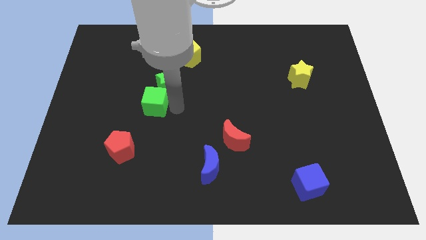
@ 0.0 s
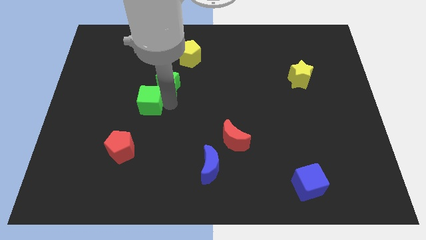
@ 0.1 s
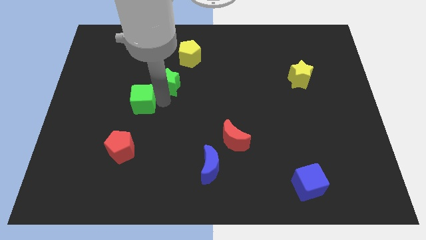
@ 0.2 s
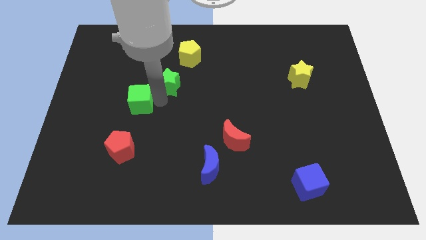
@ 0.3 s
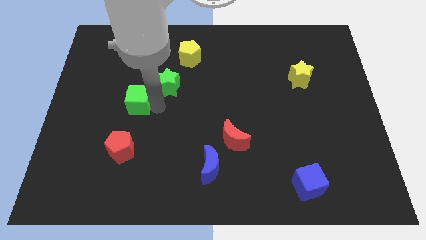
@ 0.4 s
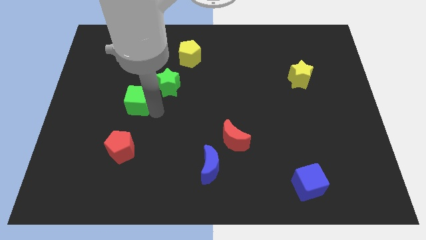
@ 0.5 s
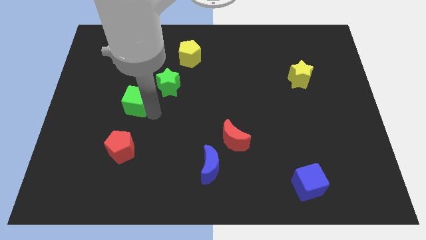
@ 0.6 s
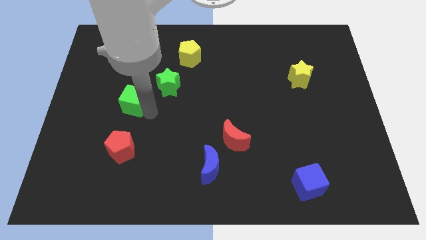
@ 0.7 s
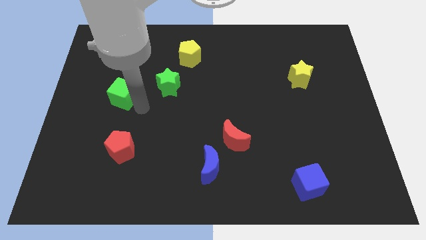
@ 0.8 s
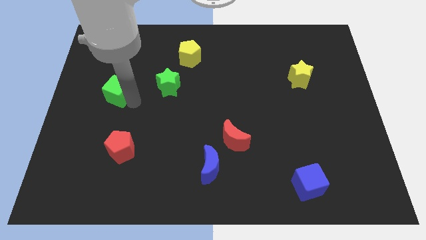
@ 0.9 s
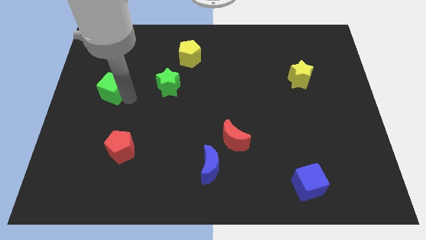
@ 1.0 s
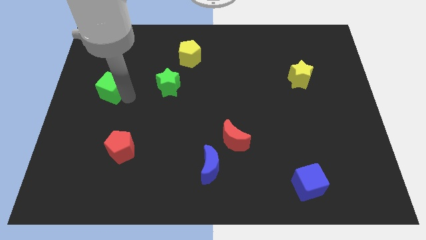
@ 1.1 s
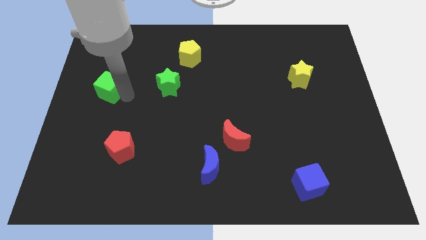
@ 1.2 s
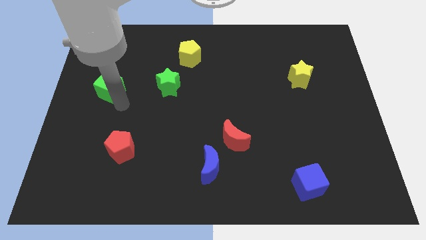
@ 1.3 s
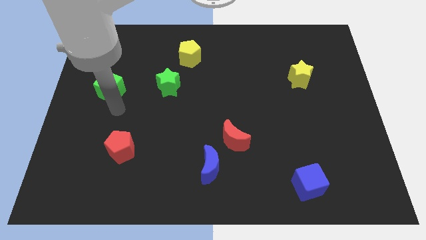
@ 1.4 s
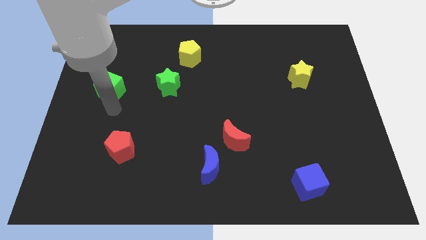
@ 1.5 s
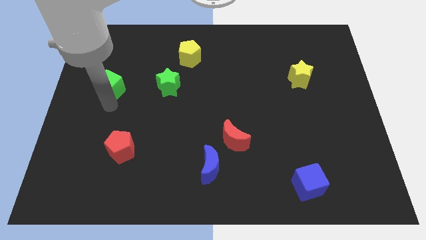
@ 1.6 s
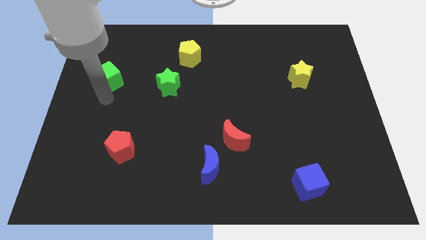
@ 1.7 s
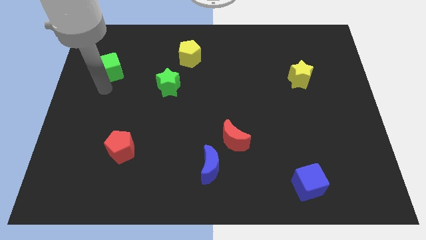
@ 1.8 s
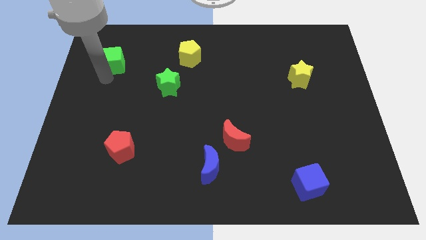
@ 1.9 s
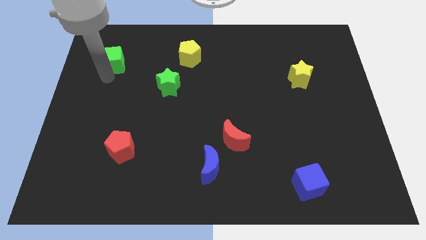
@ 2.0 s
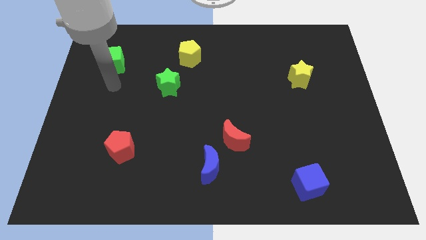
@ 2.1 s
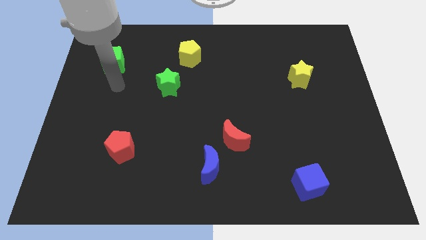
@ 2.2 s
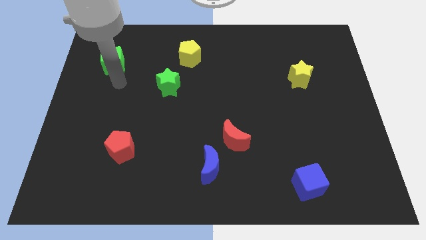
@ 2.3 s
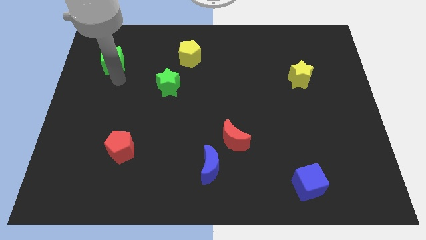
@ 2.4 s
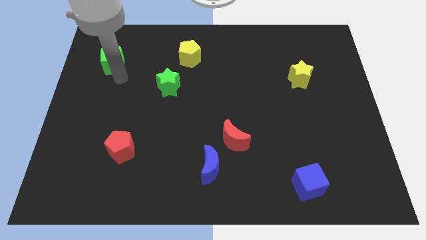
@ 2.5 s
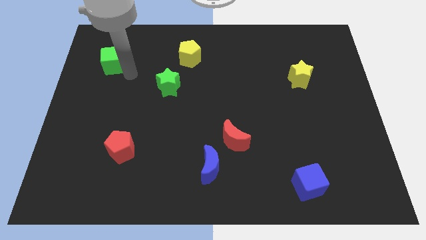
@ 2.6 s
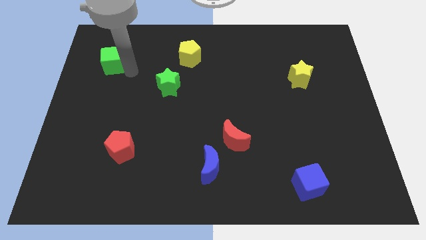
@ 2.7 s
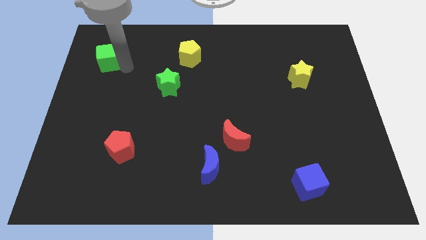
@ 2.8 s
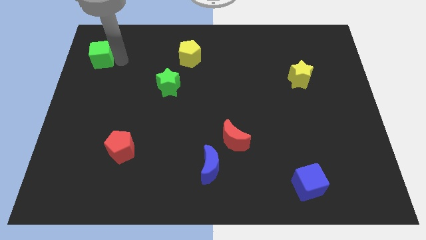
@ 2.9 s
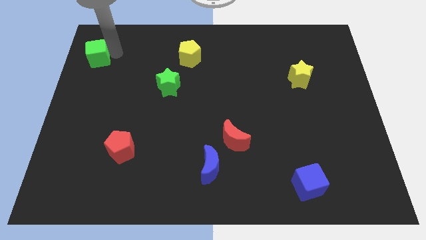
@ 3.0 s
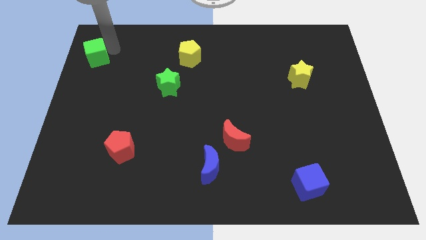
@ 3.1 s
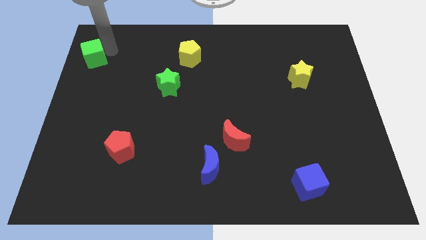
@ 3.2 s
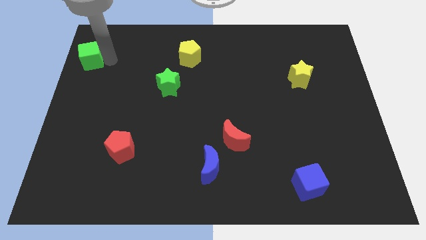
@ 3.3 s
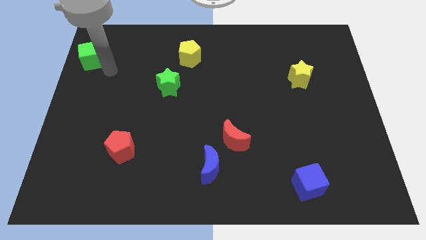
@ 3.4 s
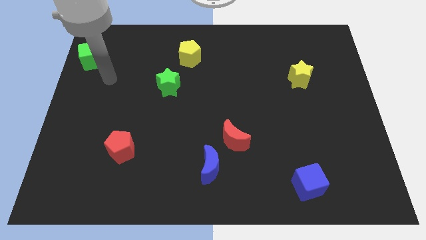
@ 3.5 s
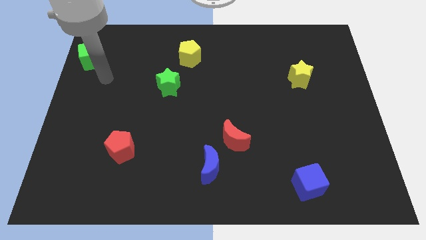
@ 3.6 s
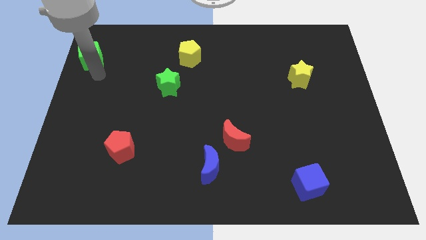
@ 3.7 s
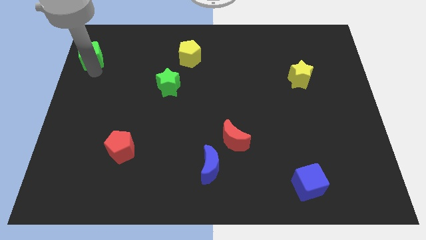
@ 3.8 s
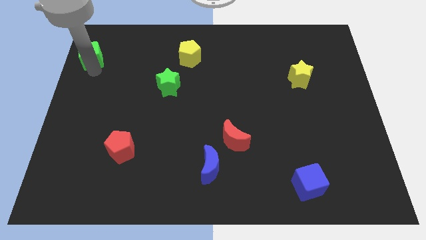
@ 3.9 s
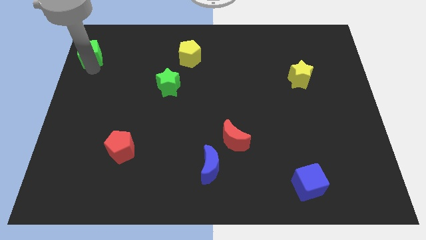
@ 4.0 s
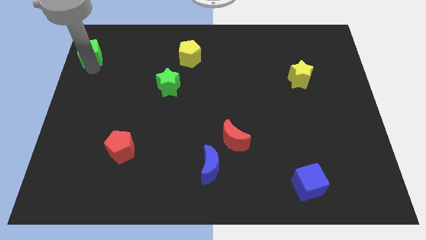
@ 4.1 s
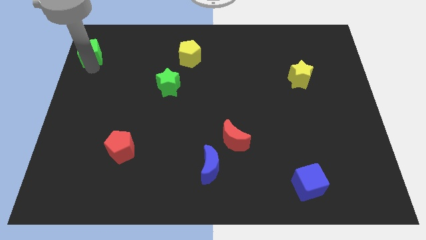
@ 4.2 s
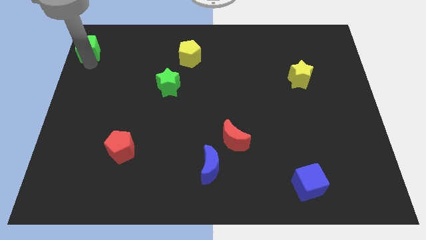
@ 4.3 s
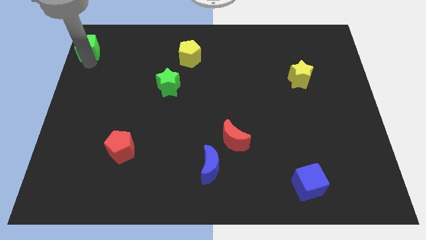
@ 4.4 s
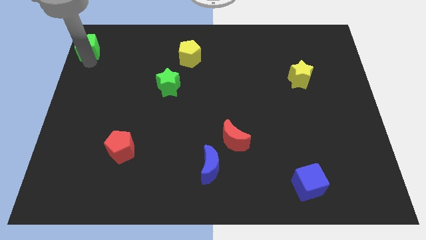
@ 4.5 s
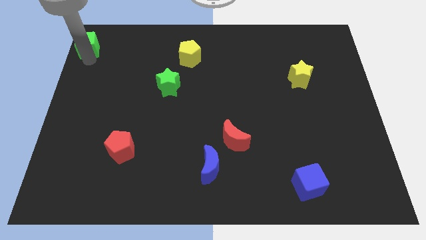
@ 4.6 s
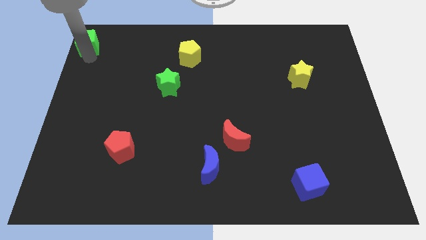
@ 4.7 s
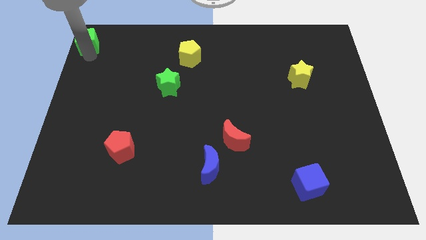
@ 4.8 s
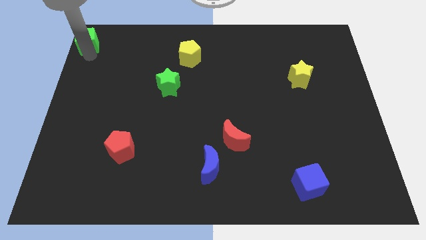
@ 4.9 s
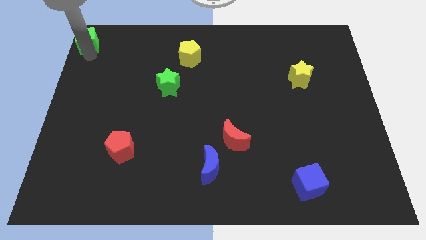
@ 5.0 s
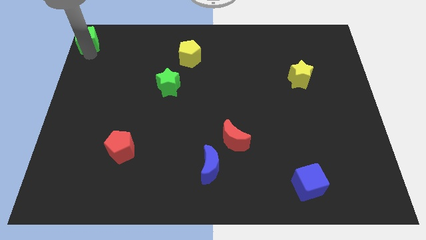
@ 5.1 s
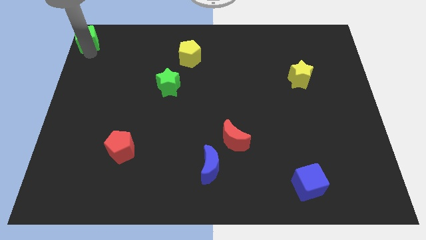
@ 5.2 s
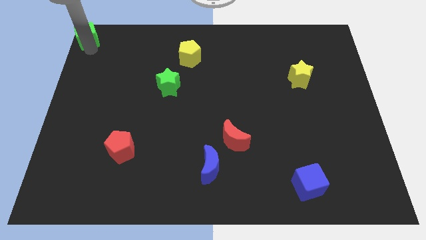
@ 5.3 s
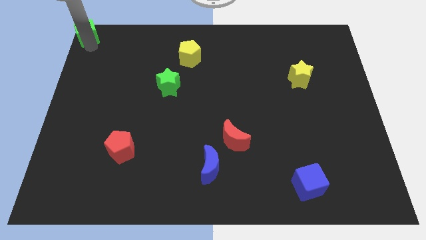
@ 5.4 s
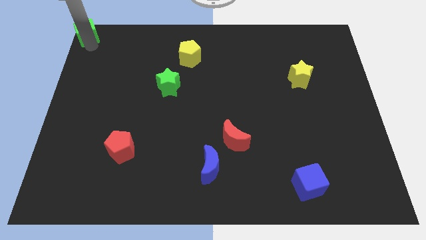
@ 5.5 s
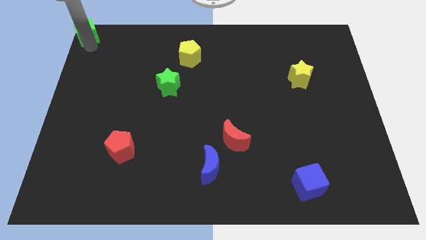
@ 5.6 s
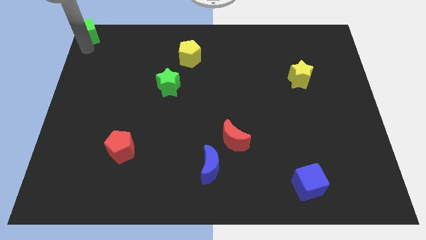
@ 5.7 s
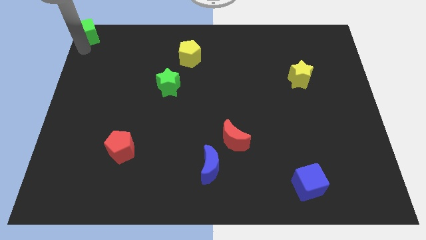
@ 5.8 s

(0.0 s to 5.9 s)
push the green cube to the top left corner of the board

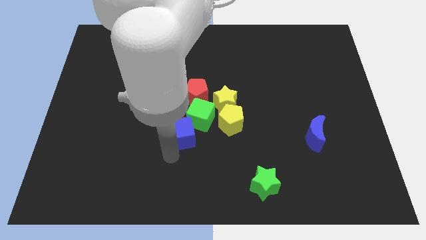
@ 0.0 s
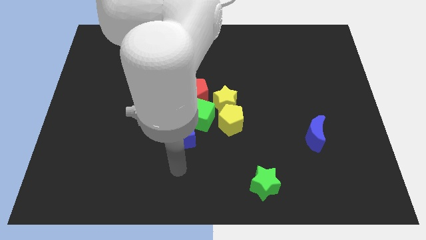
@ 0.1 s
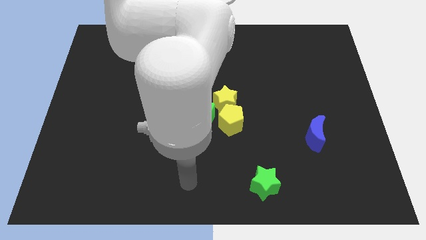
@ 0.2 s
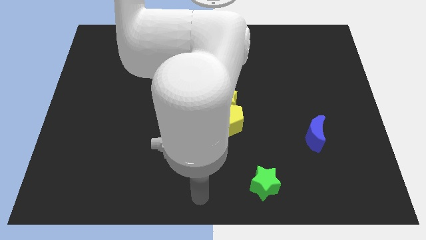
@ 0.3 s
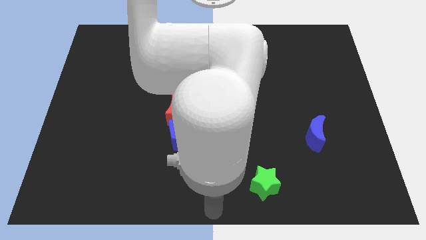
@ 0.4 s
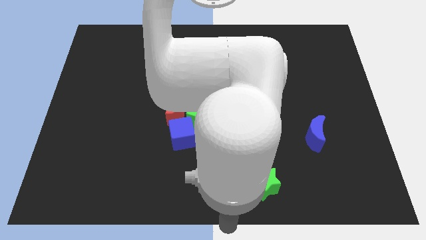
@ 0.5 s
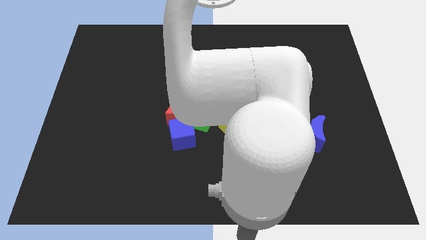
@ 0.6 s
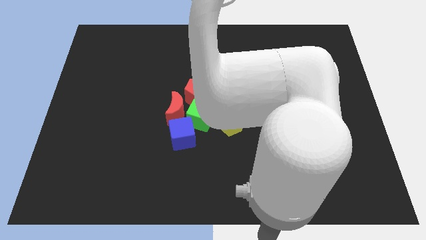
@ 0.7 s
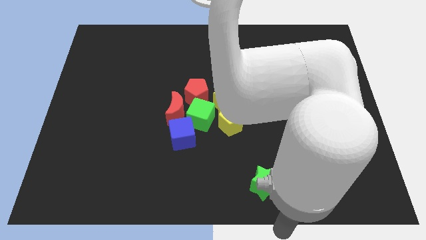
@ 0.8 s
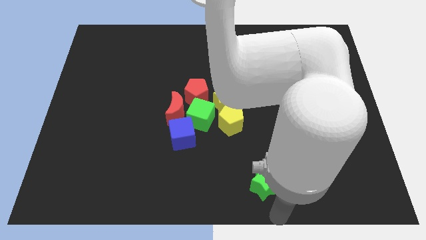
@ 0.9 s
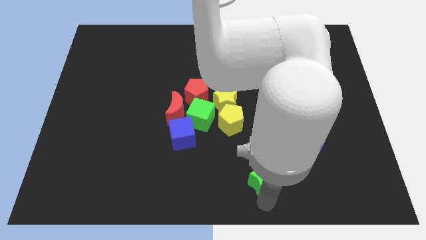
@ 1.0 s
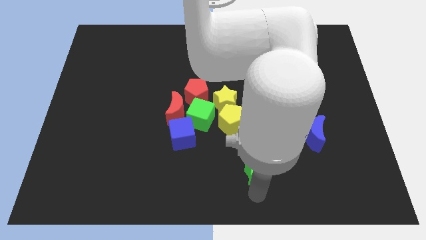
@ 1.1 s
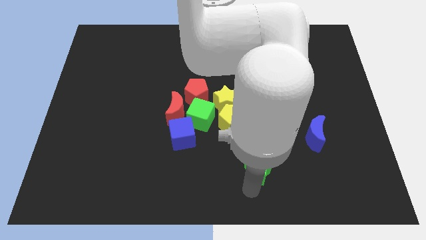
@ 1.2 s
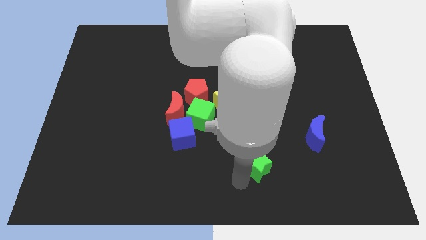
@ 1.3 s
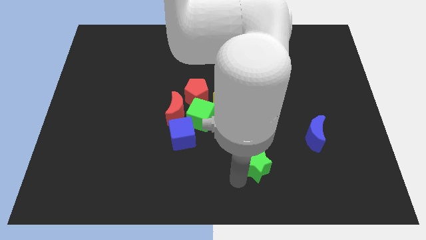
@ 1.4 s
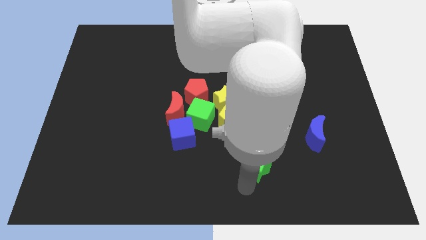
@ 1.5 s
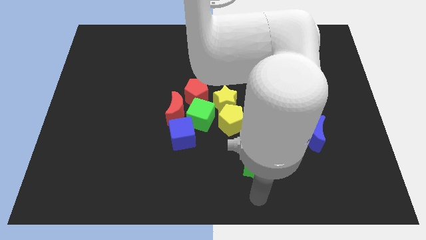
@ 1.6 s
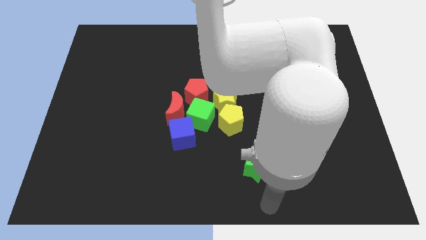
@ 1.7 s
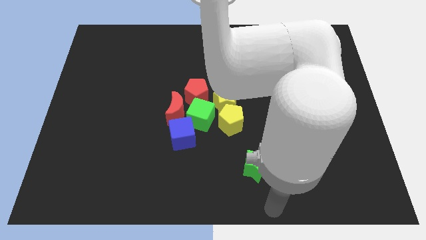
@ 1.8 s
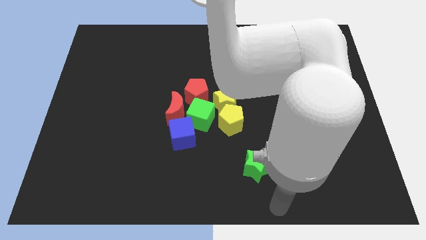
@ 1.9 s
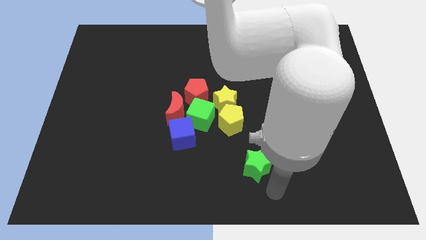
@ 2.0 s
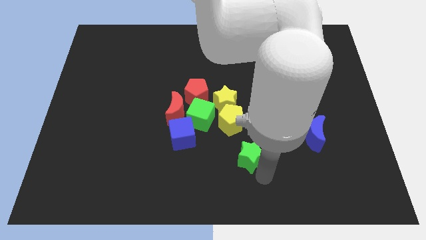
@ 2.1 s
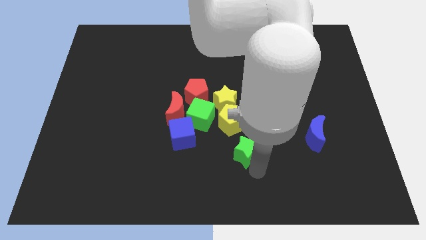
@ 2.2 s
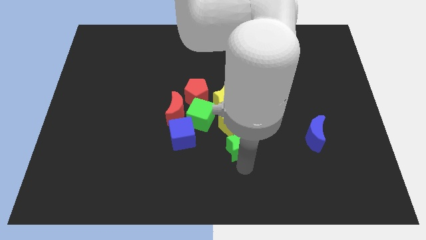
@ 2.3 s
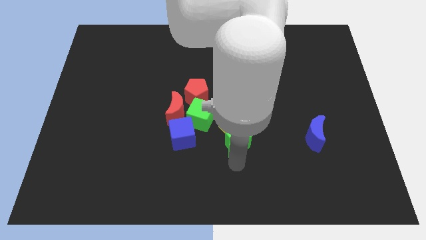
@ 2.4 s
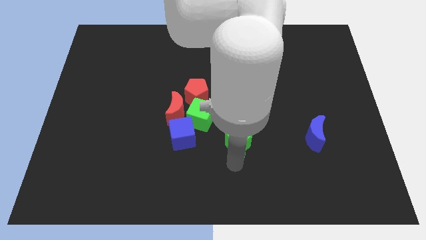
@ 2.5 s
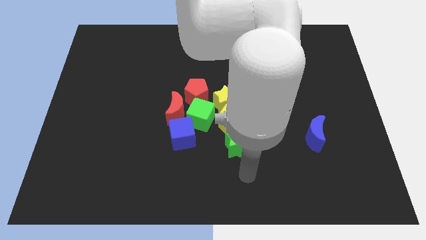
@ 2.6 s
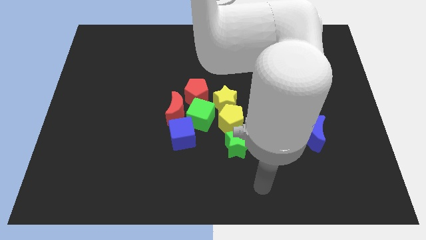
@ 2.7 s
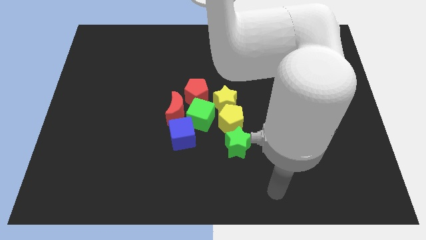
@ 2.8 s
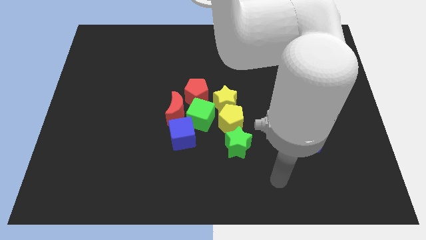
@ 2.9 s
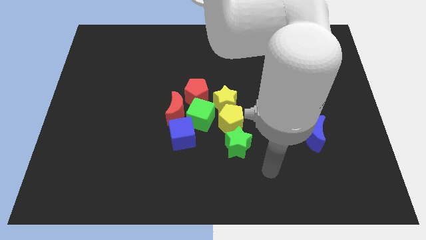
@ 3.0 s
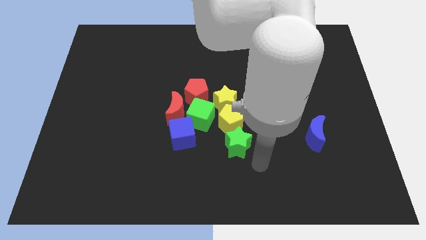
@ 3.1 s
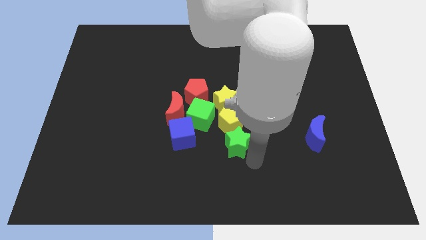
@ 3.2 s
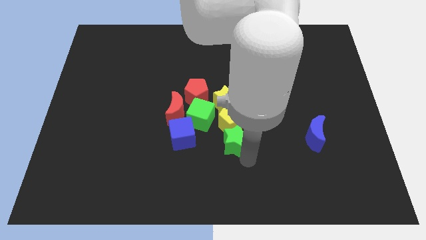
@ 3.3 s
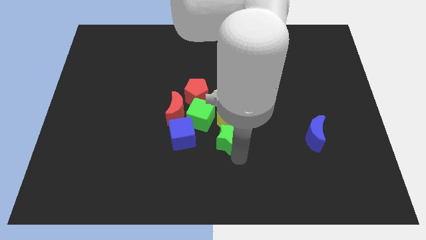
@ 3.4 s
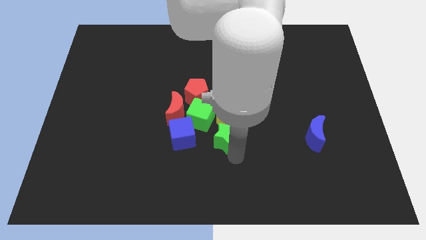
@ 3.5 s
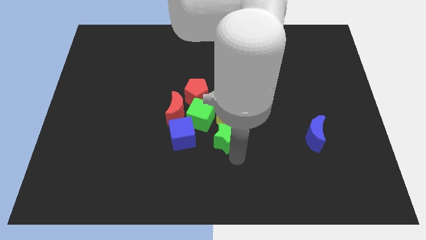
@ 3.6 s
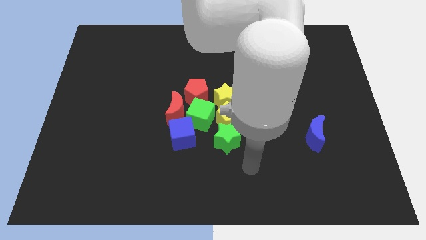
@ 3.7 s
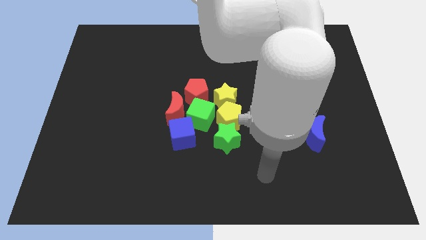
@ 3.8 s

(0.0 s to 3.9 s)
move the green star to the bottom center of the board
